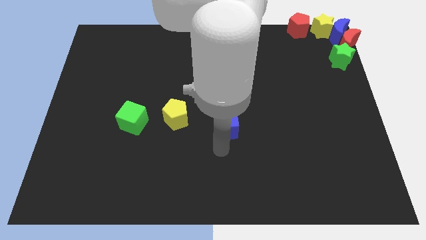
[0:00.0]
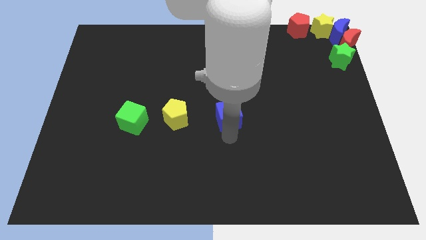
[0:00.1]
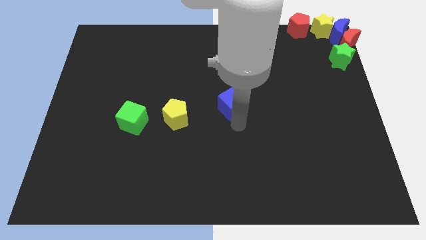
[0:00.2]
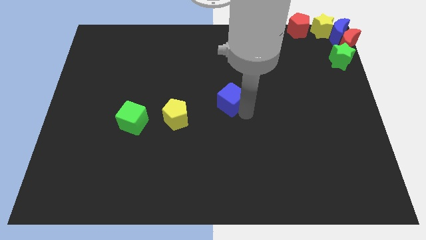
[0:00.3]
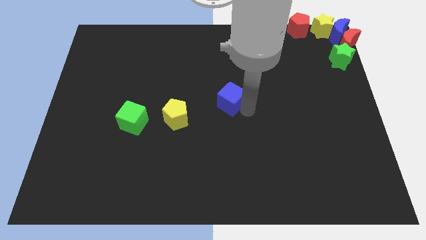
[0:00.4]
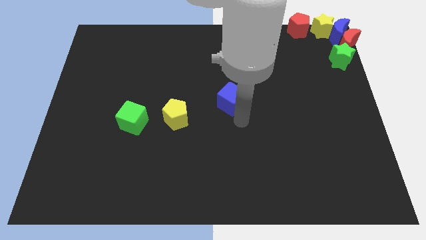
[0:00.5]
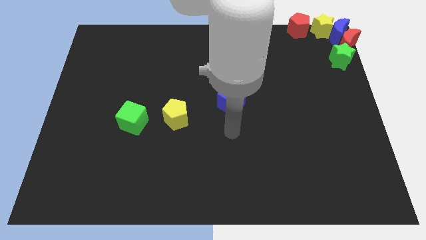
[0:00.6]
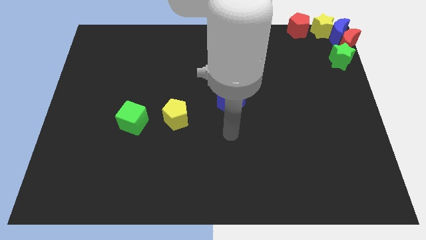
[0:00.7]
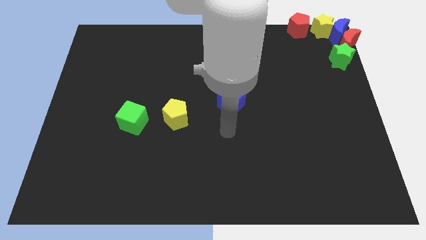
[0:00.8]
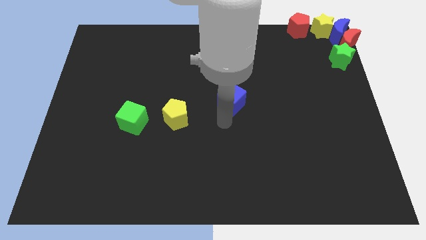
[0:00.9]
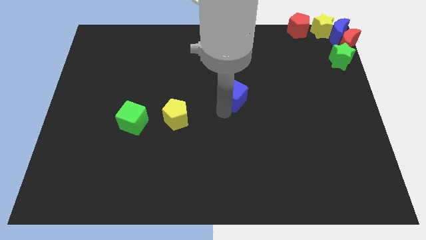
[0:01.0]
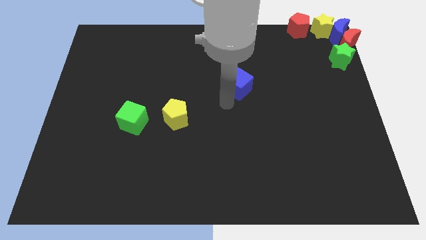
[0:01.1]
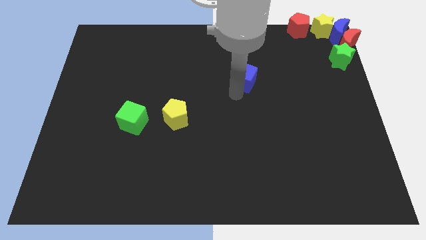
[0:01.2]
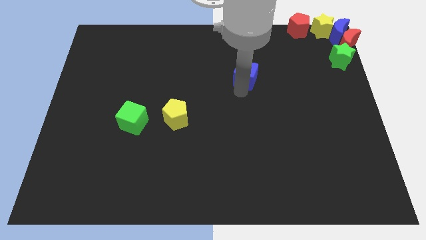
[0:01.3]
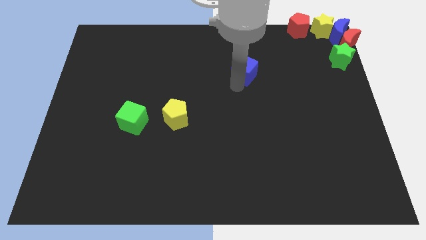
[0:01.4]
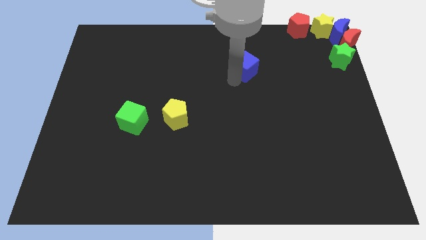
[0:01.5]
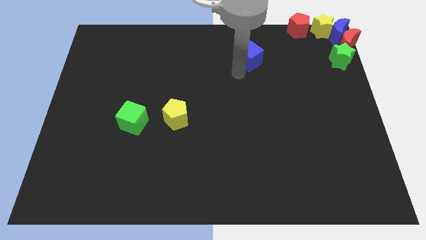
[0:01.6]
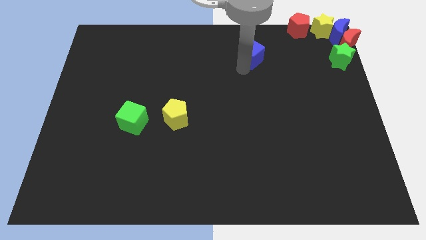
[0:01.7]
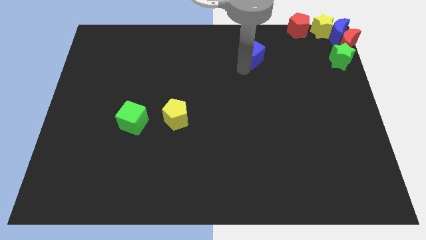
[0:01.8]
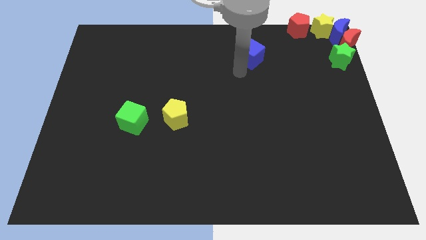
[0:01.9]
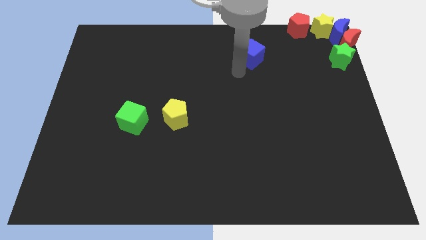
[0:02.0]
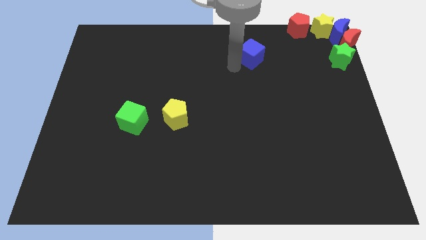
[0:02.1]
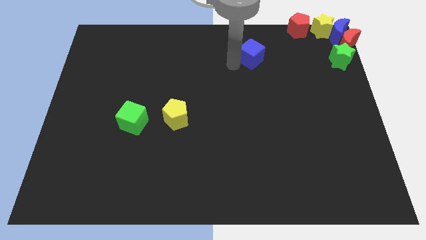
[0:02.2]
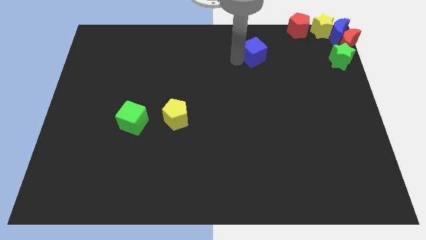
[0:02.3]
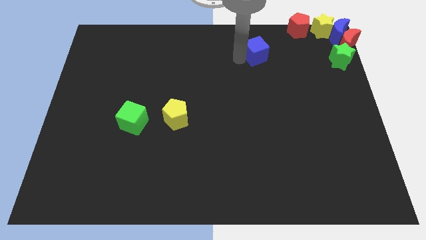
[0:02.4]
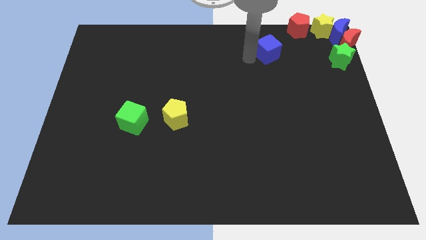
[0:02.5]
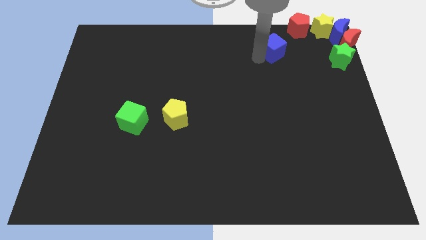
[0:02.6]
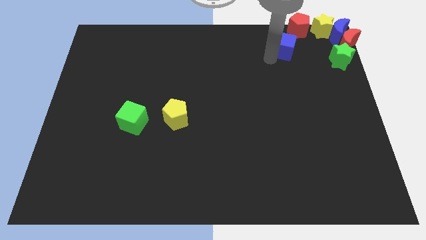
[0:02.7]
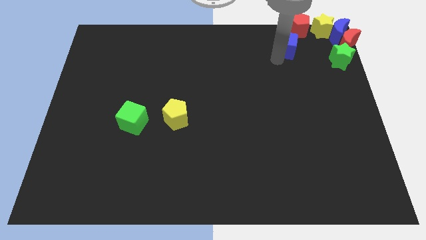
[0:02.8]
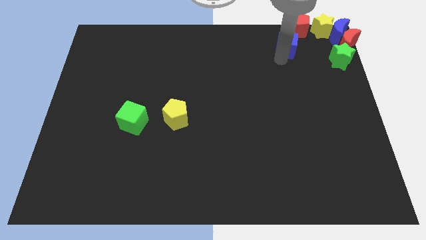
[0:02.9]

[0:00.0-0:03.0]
move the blue cube towards the bottom of red pentagon

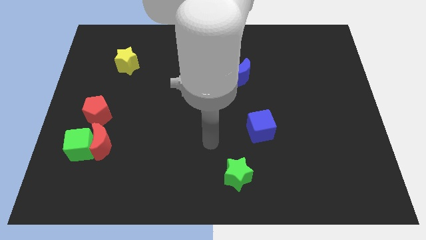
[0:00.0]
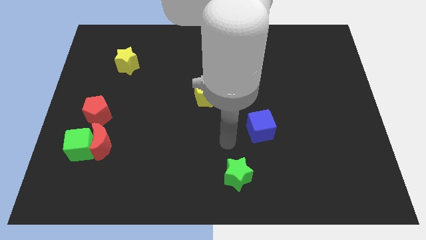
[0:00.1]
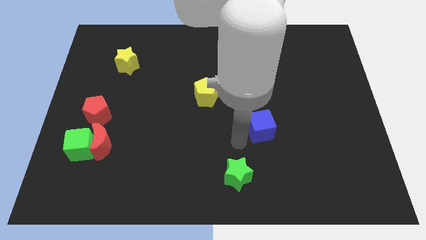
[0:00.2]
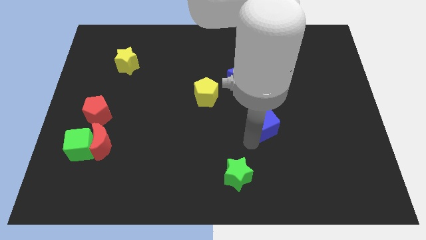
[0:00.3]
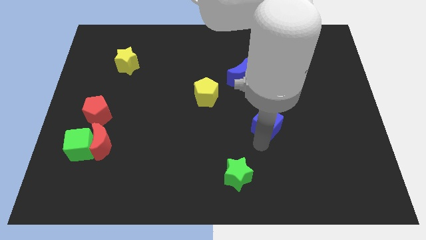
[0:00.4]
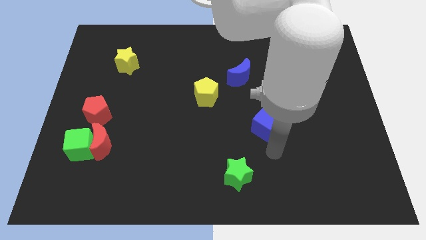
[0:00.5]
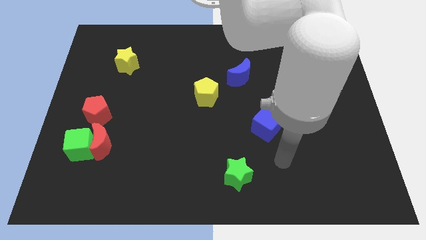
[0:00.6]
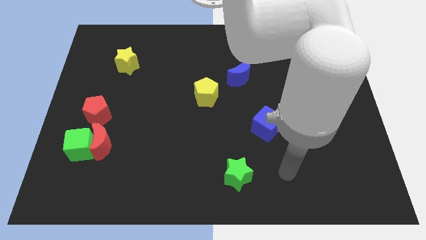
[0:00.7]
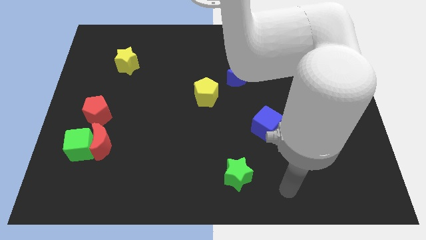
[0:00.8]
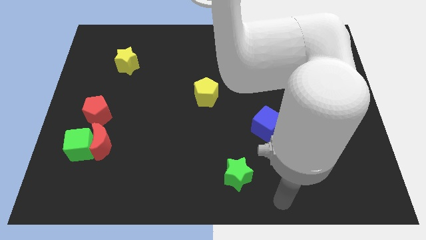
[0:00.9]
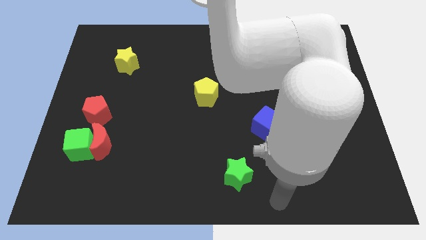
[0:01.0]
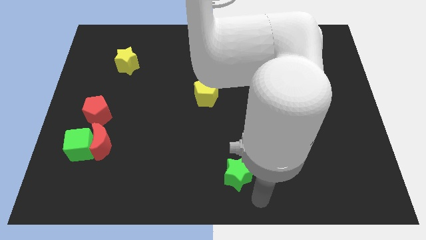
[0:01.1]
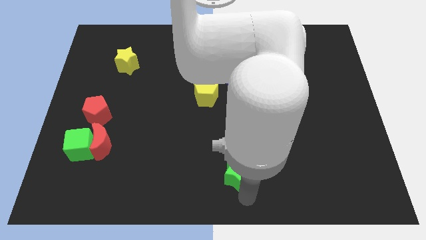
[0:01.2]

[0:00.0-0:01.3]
place your arm to the bottom of green star

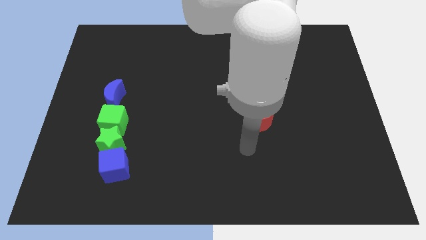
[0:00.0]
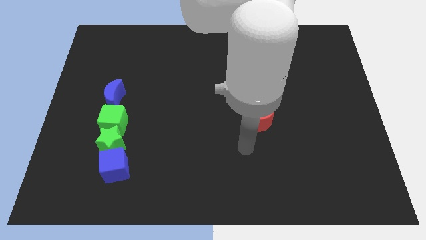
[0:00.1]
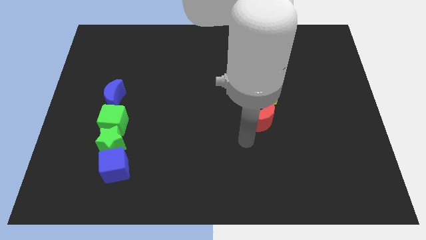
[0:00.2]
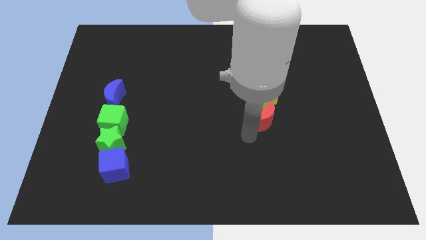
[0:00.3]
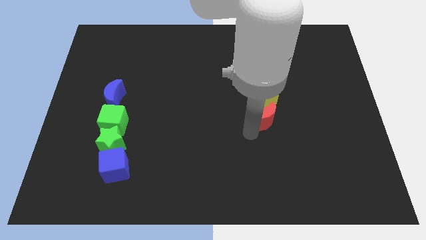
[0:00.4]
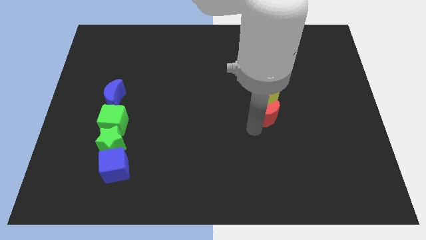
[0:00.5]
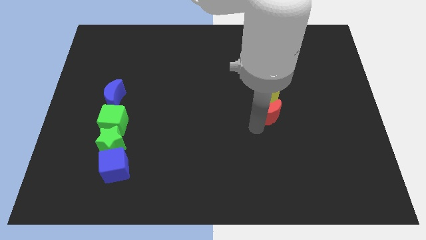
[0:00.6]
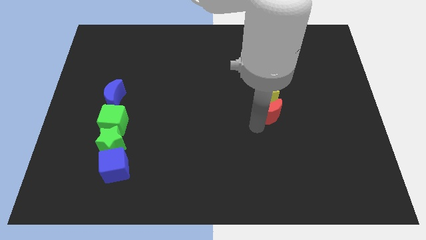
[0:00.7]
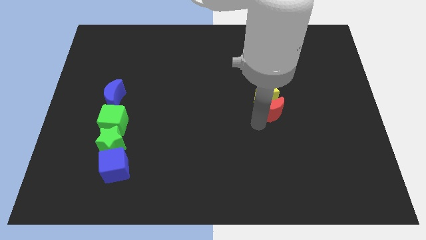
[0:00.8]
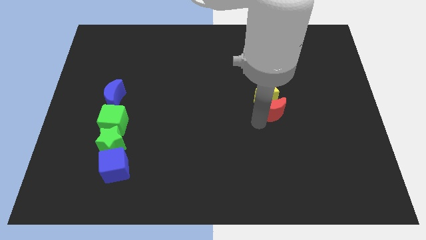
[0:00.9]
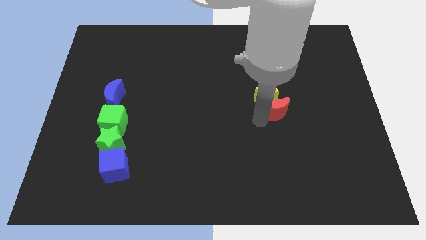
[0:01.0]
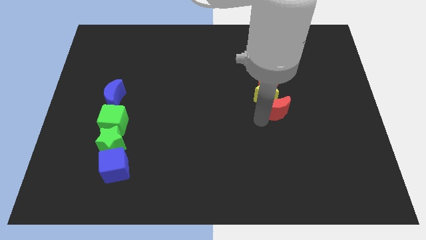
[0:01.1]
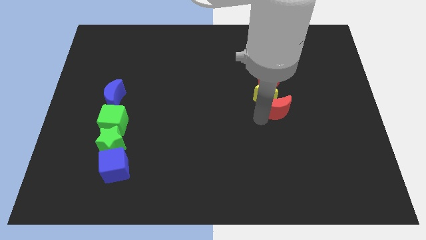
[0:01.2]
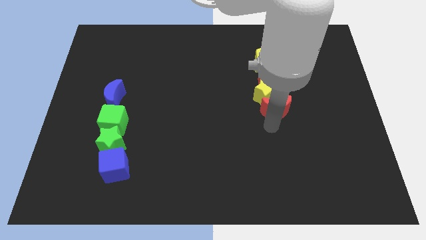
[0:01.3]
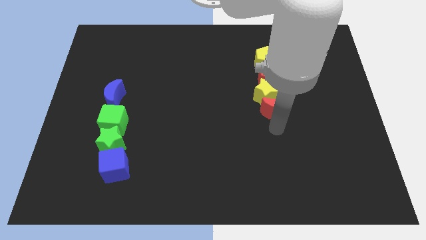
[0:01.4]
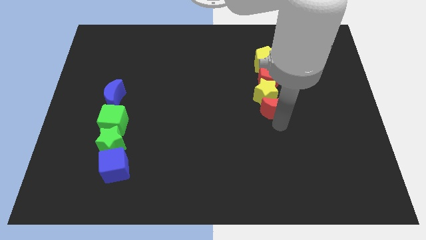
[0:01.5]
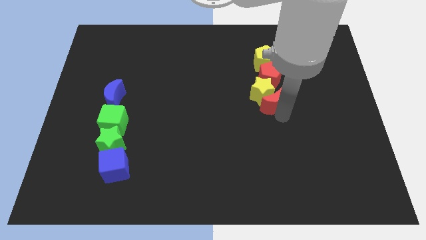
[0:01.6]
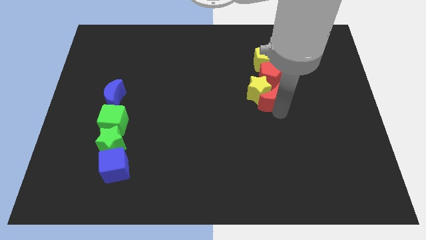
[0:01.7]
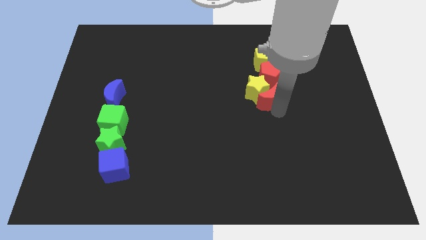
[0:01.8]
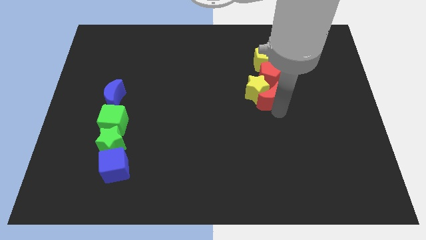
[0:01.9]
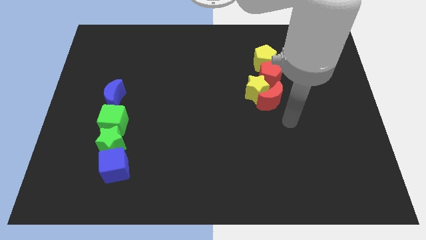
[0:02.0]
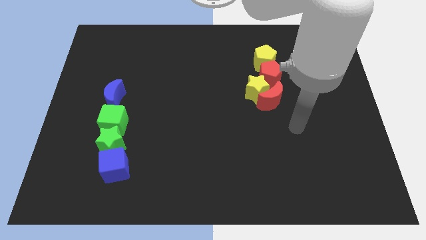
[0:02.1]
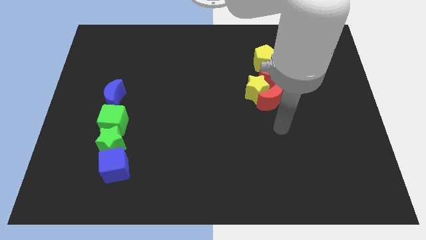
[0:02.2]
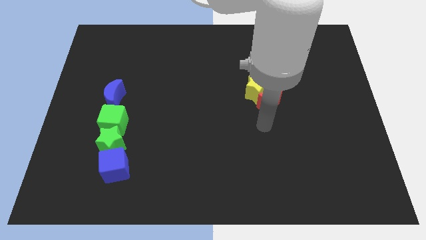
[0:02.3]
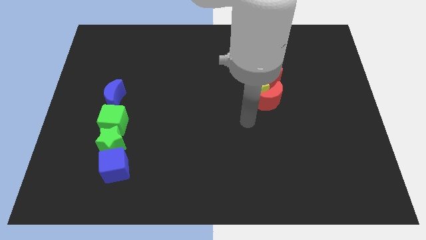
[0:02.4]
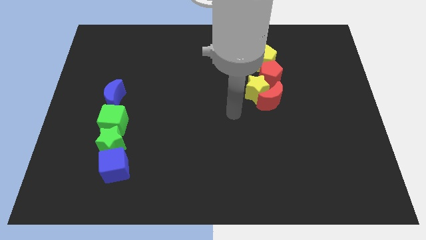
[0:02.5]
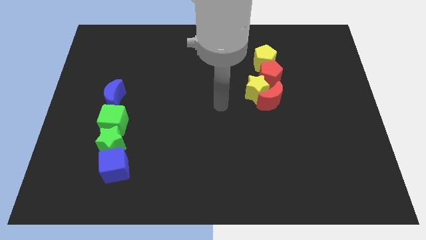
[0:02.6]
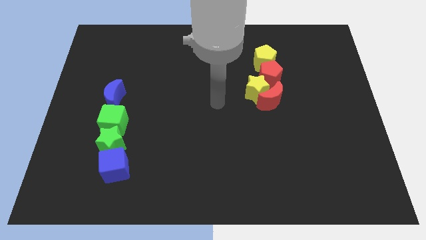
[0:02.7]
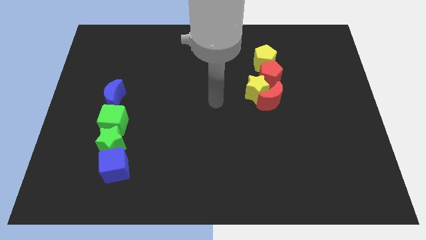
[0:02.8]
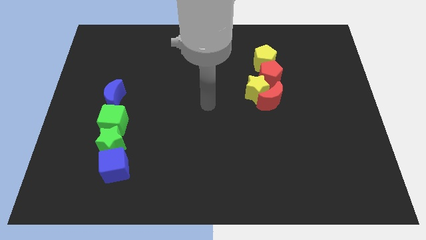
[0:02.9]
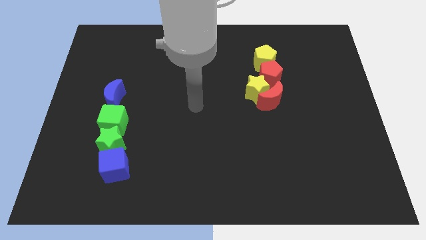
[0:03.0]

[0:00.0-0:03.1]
move the red crescent into the red pentagon

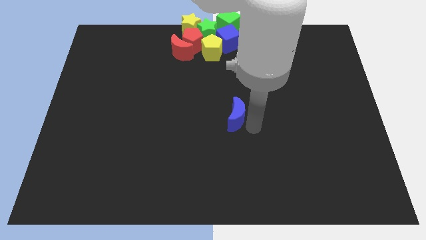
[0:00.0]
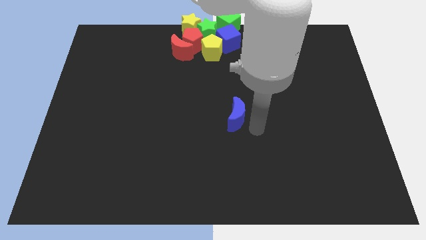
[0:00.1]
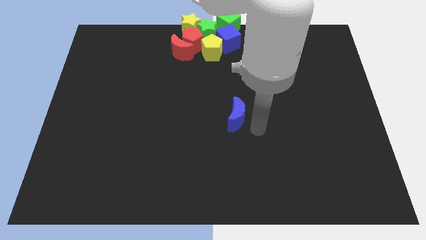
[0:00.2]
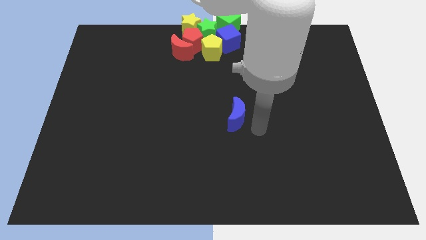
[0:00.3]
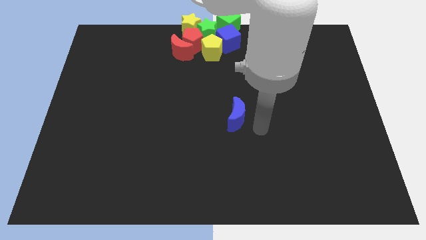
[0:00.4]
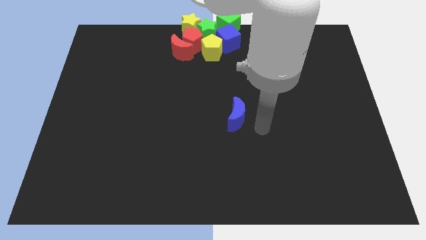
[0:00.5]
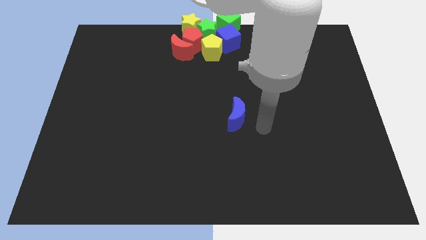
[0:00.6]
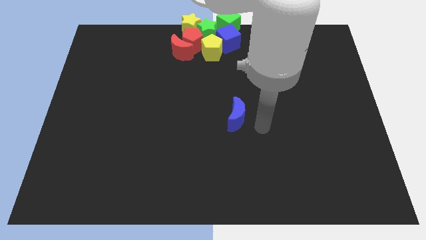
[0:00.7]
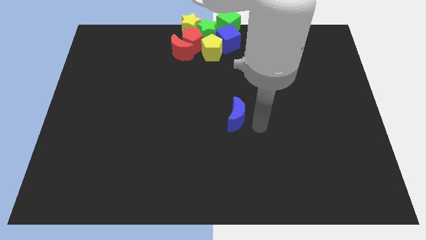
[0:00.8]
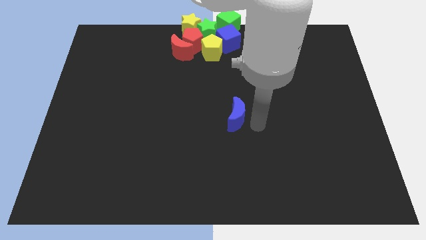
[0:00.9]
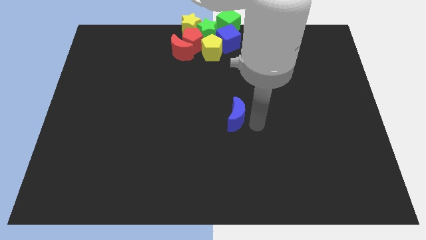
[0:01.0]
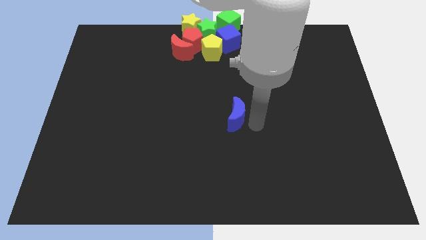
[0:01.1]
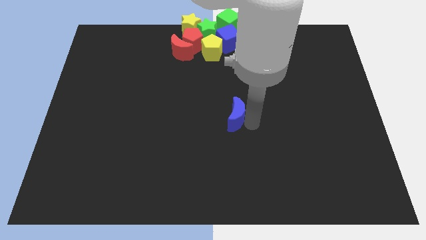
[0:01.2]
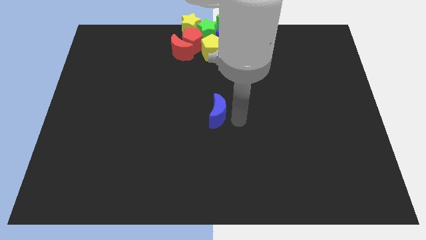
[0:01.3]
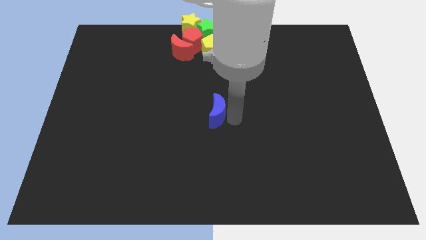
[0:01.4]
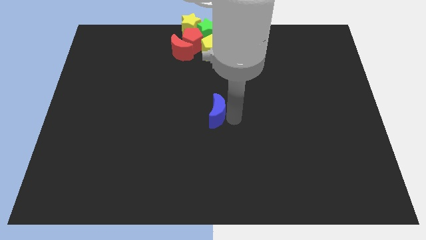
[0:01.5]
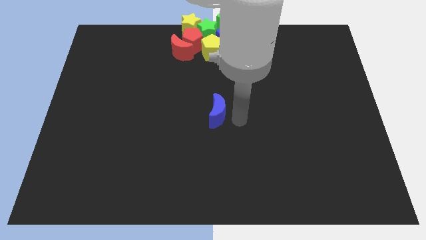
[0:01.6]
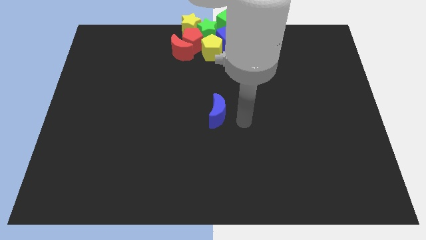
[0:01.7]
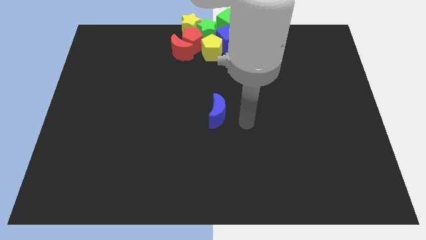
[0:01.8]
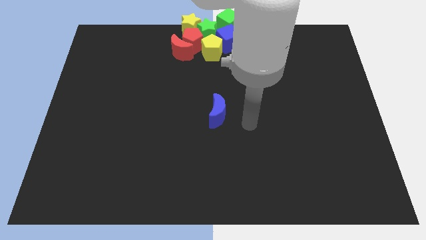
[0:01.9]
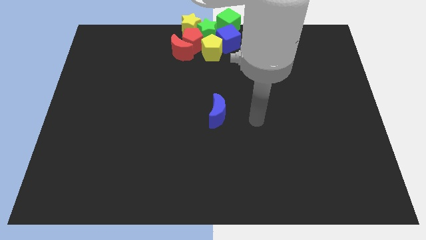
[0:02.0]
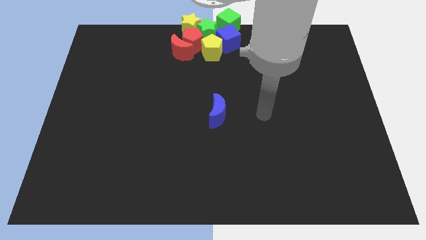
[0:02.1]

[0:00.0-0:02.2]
place the blue crescent at the center of the board
